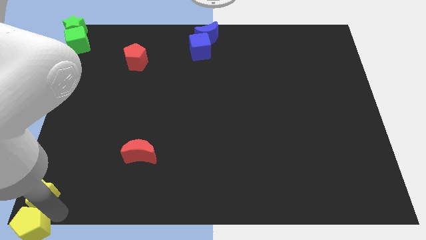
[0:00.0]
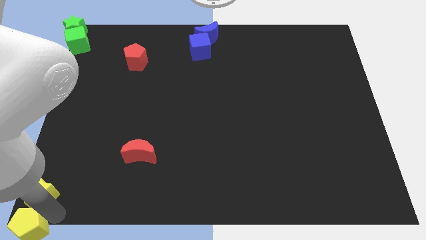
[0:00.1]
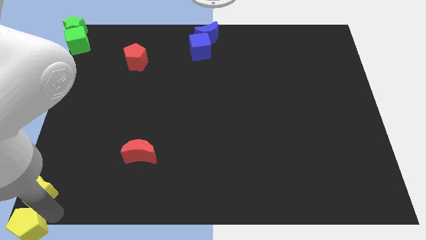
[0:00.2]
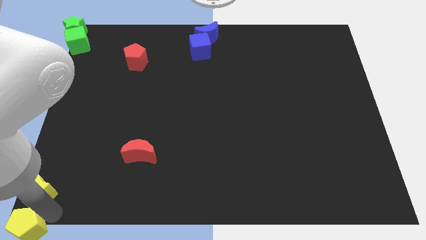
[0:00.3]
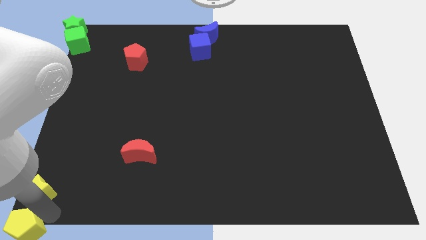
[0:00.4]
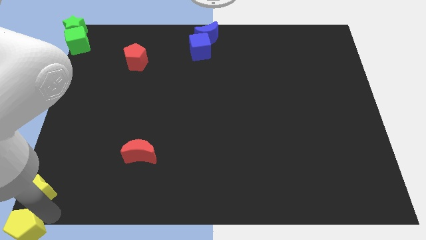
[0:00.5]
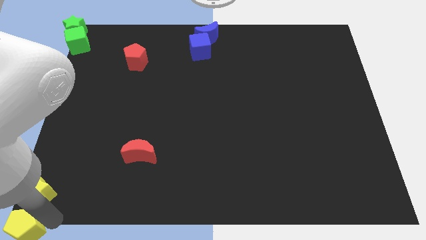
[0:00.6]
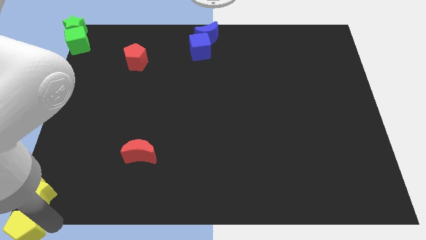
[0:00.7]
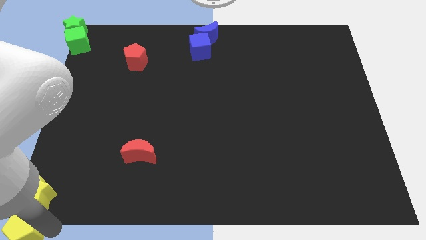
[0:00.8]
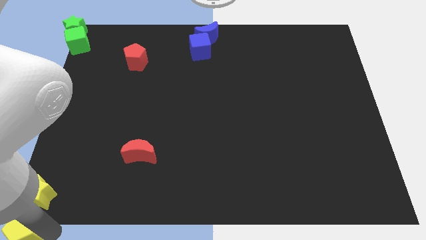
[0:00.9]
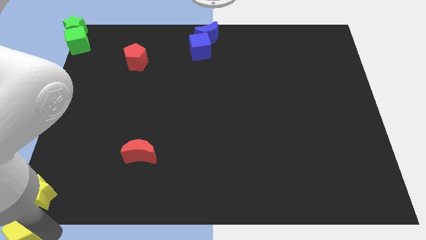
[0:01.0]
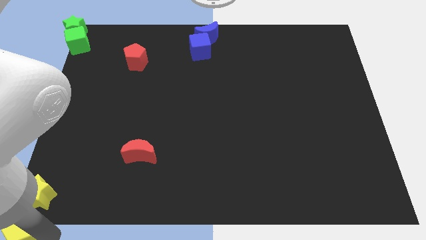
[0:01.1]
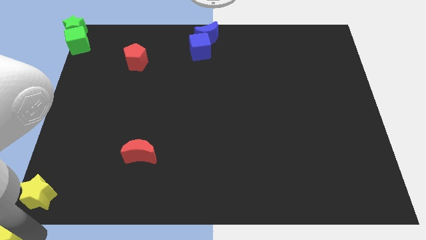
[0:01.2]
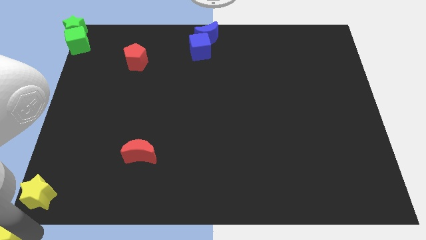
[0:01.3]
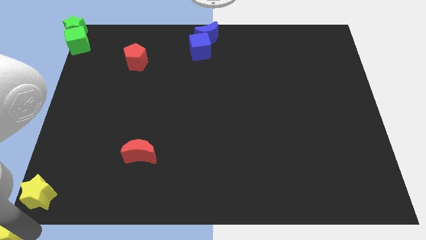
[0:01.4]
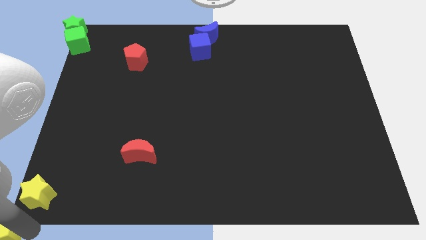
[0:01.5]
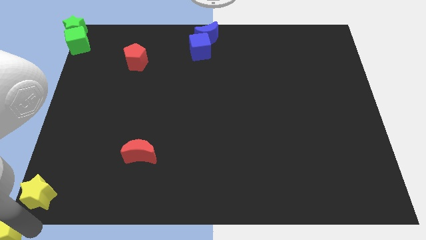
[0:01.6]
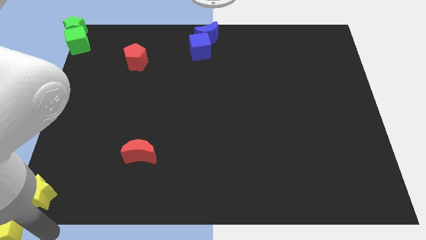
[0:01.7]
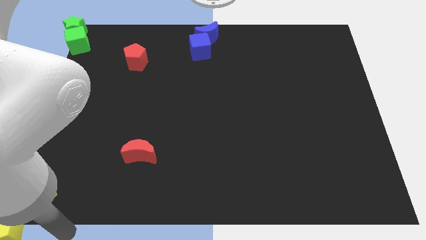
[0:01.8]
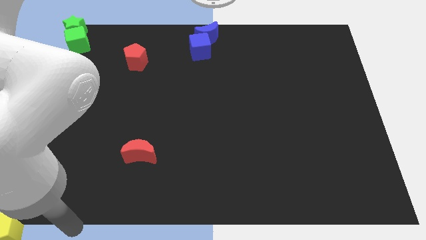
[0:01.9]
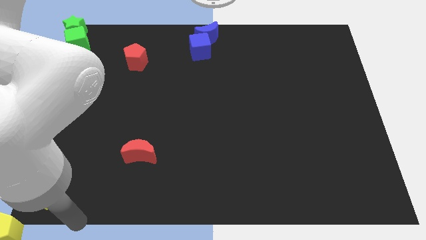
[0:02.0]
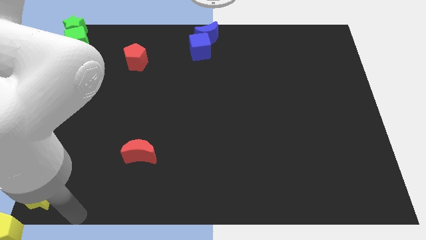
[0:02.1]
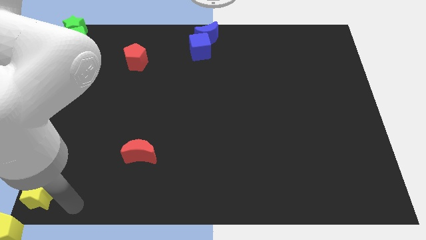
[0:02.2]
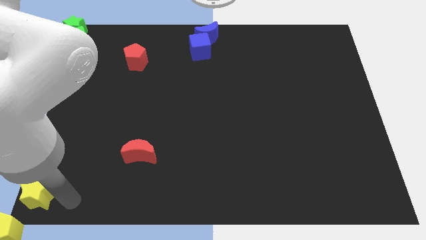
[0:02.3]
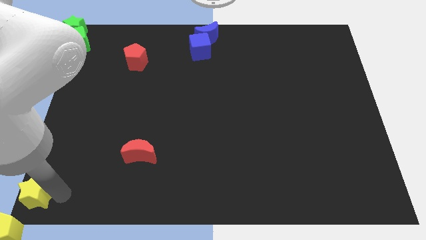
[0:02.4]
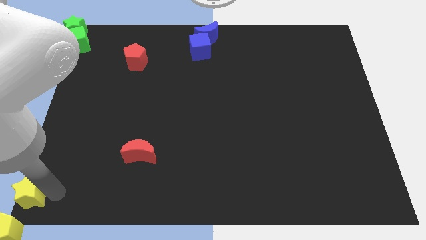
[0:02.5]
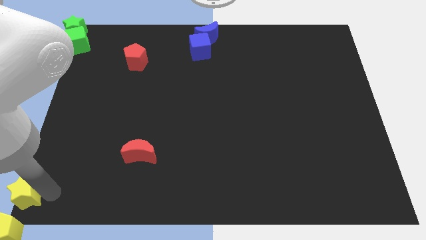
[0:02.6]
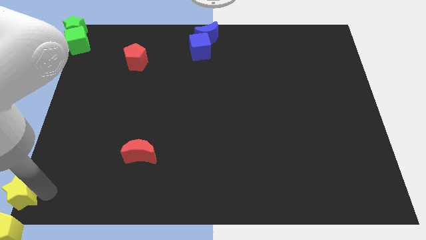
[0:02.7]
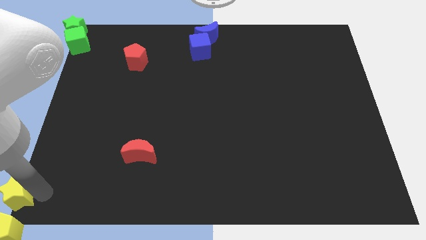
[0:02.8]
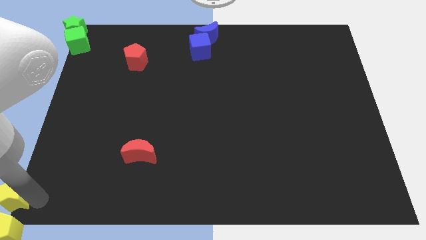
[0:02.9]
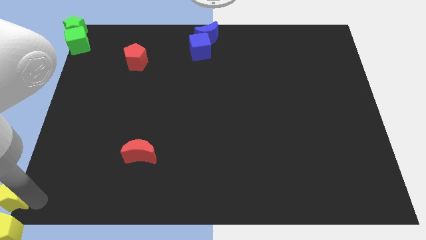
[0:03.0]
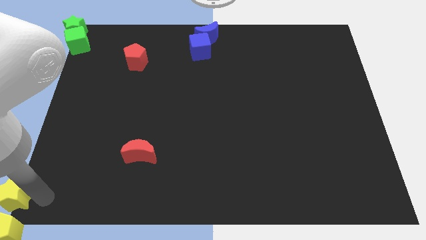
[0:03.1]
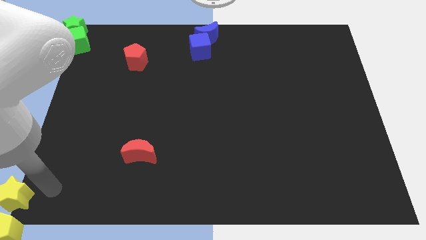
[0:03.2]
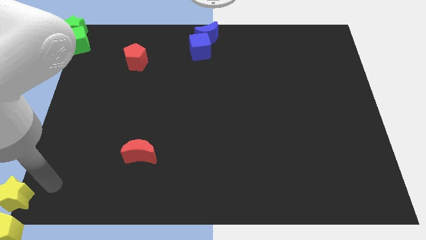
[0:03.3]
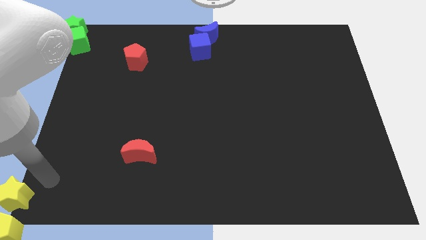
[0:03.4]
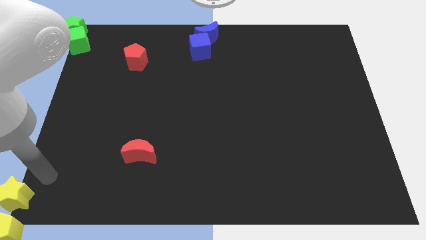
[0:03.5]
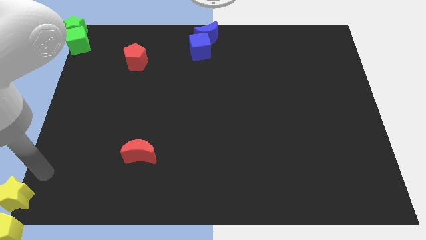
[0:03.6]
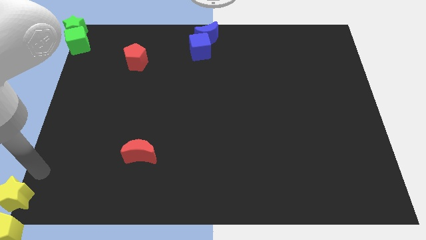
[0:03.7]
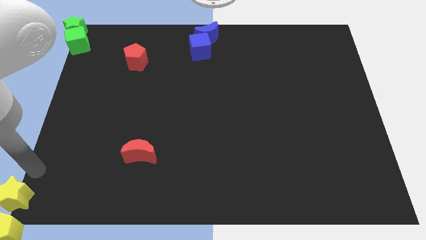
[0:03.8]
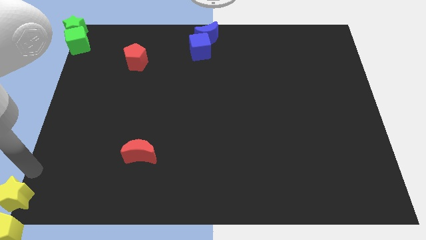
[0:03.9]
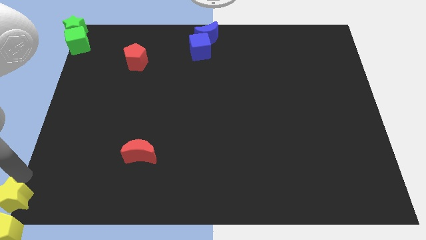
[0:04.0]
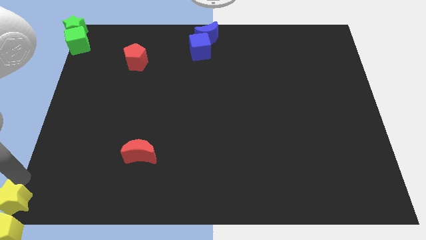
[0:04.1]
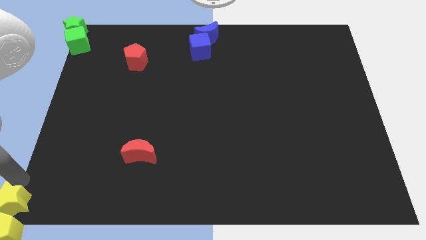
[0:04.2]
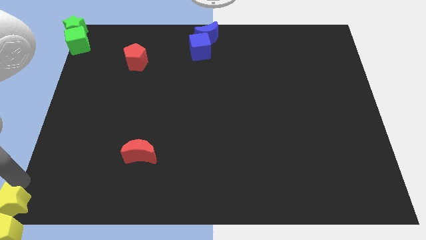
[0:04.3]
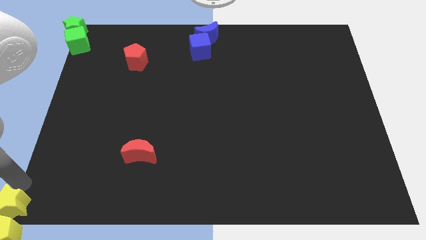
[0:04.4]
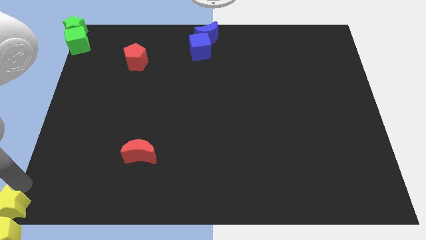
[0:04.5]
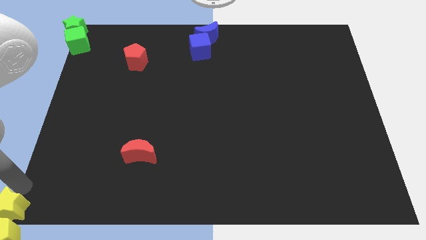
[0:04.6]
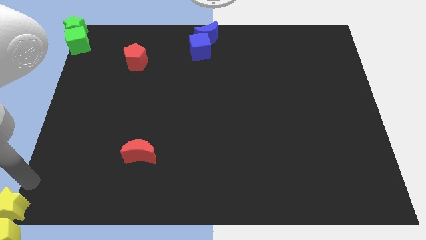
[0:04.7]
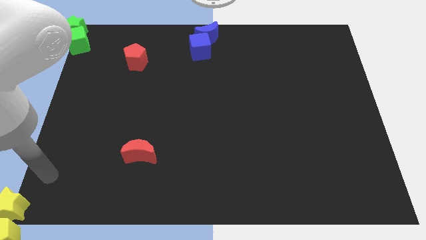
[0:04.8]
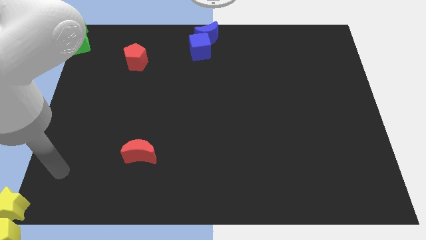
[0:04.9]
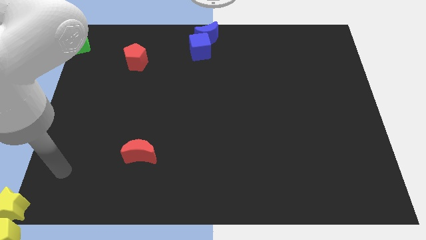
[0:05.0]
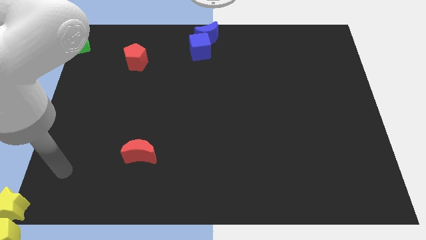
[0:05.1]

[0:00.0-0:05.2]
move the yellow blocks to bottom left

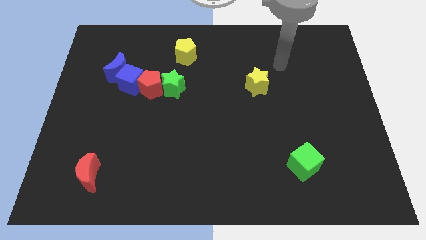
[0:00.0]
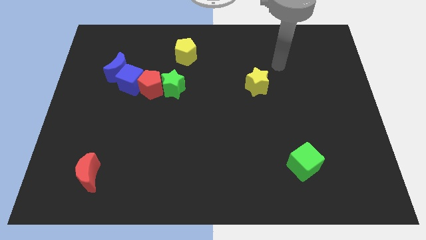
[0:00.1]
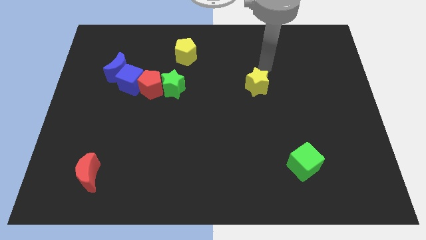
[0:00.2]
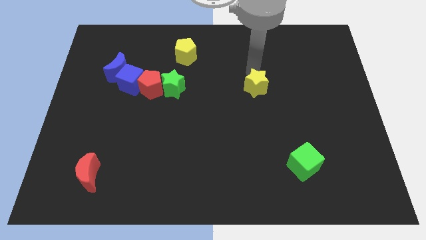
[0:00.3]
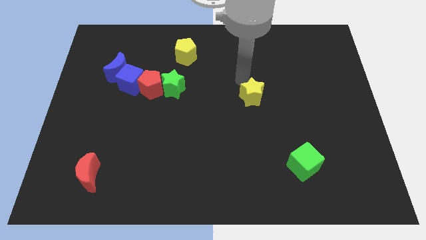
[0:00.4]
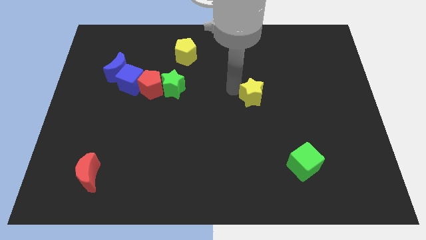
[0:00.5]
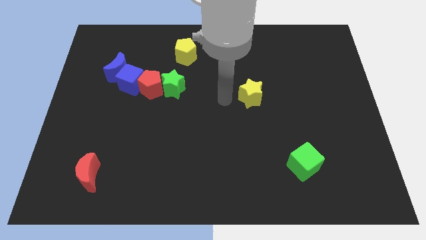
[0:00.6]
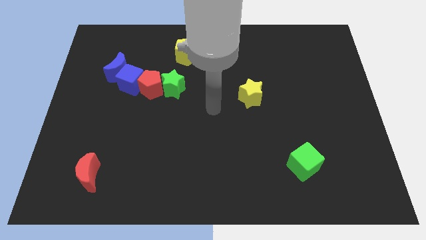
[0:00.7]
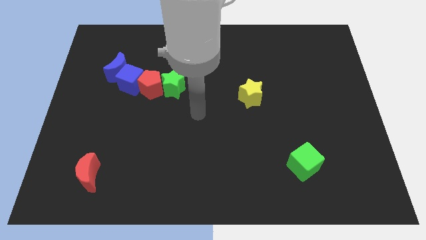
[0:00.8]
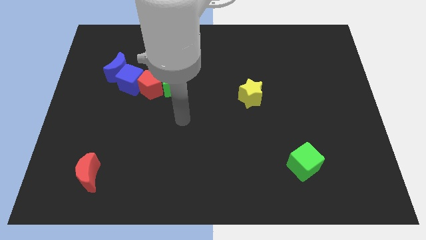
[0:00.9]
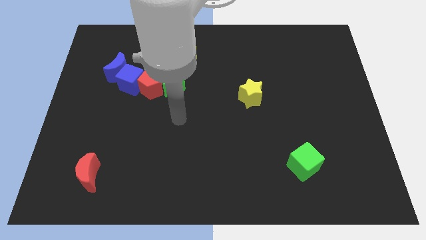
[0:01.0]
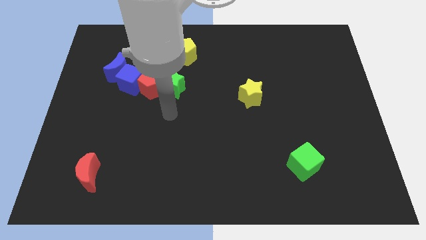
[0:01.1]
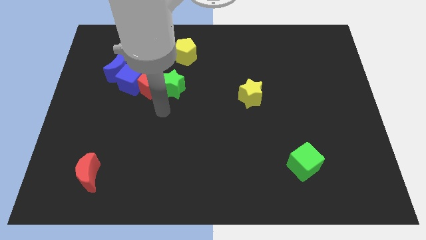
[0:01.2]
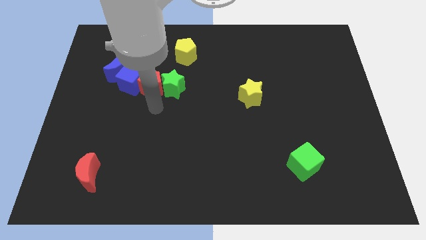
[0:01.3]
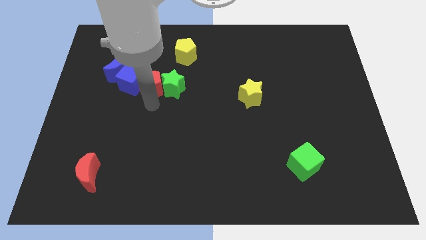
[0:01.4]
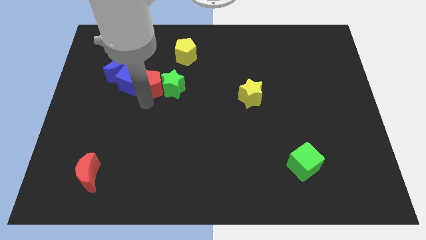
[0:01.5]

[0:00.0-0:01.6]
move your arm to the bottom side of the red pentagon

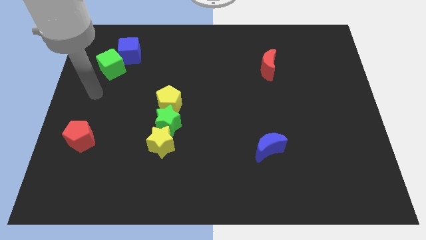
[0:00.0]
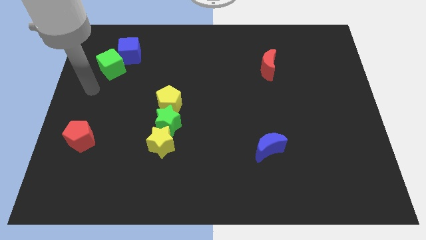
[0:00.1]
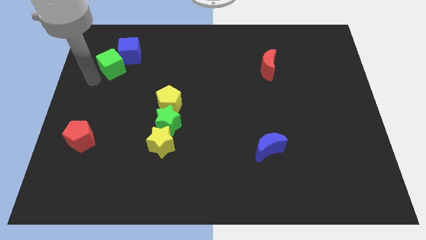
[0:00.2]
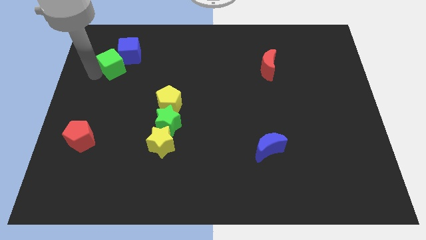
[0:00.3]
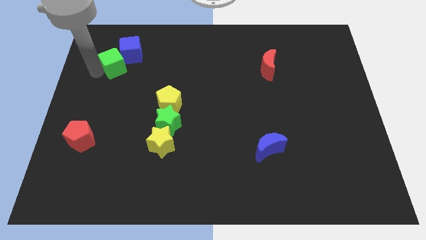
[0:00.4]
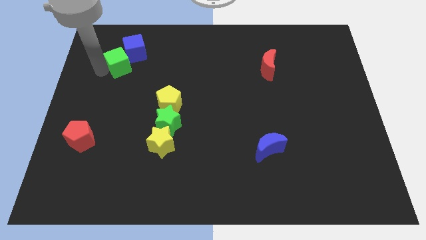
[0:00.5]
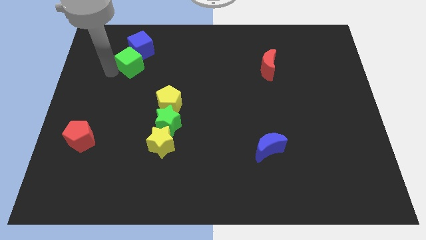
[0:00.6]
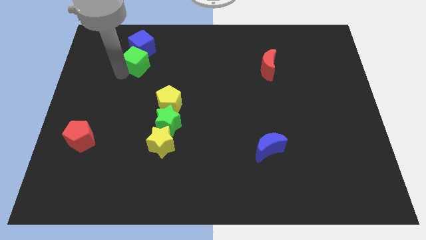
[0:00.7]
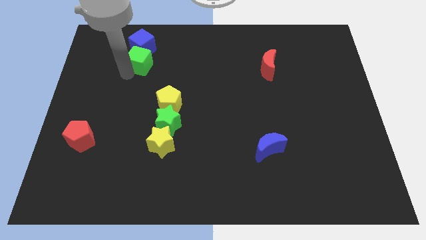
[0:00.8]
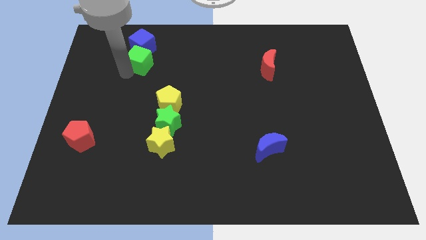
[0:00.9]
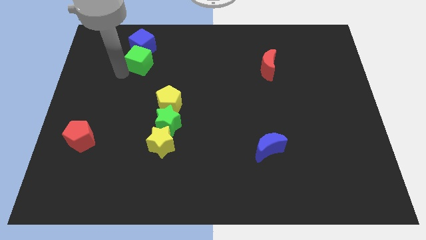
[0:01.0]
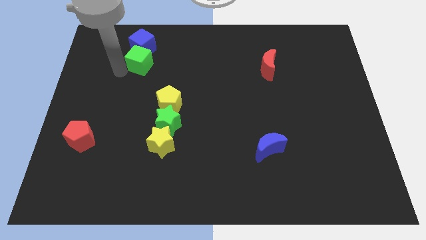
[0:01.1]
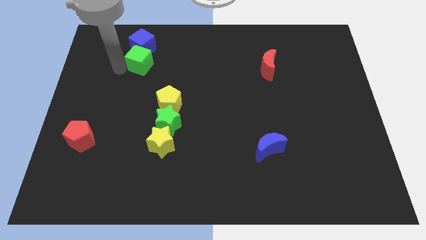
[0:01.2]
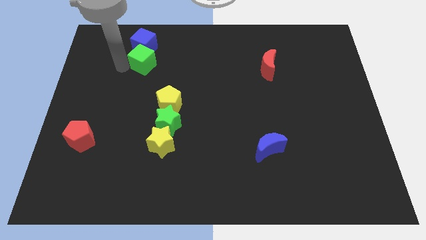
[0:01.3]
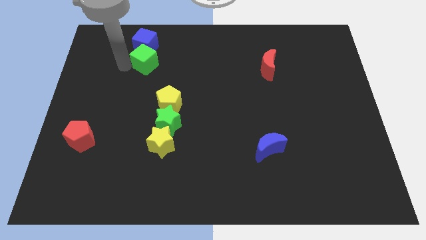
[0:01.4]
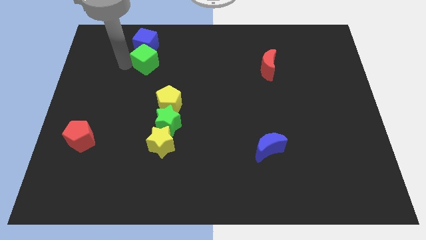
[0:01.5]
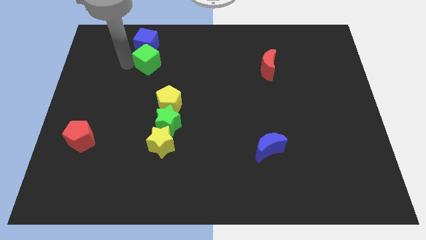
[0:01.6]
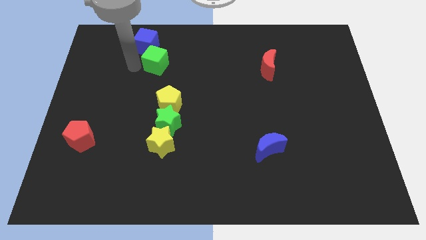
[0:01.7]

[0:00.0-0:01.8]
push the green cube to the bottom right to the blue cube

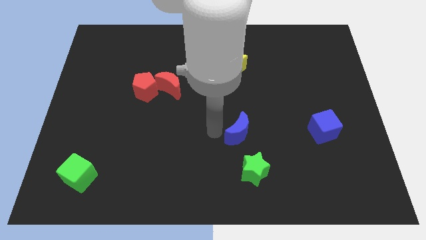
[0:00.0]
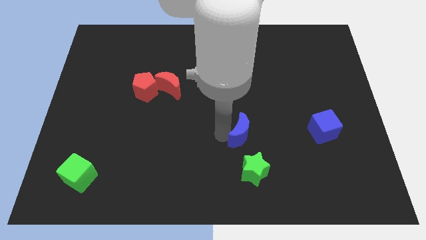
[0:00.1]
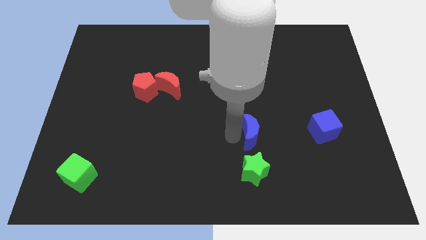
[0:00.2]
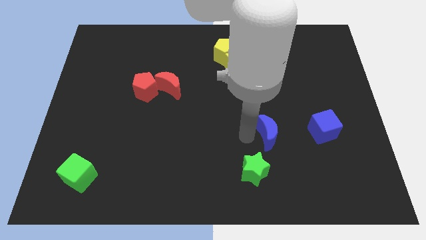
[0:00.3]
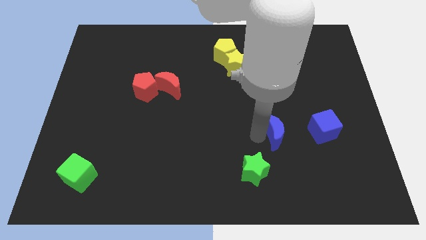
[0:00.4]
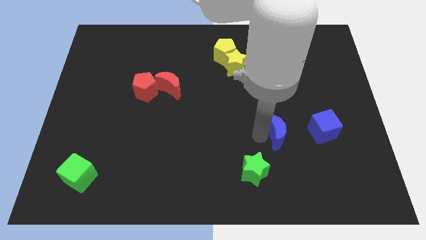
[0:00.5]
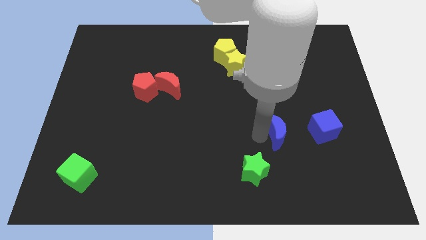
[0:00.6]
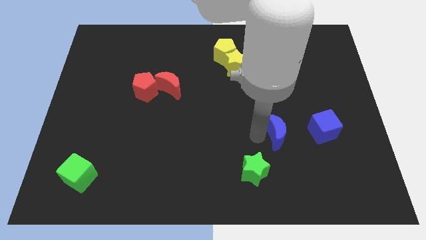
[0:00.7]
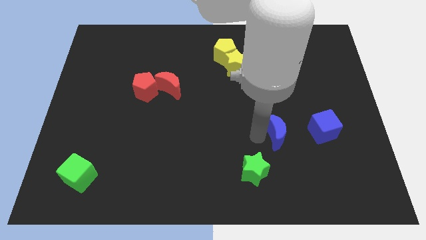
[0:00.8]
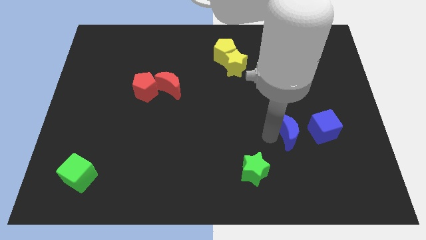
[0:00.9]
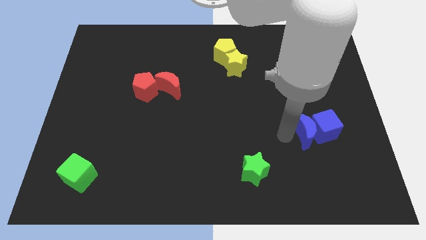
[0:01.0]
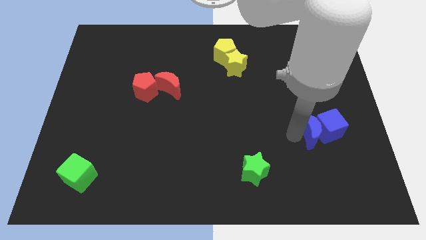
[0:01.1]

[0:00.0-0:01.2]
move the blue moon into the blue cube
